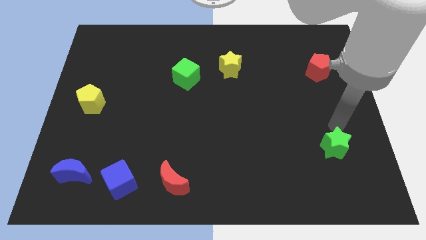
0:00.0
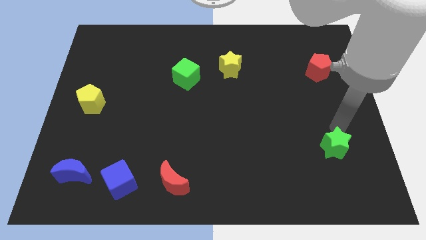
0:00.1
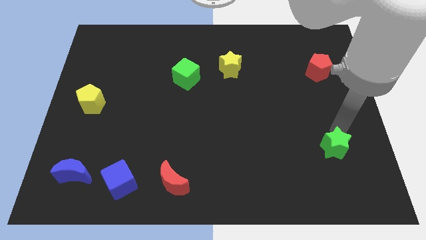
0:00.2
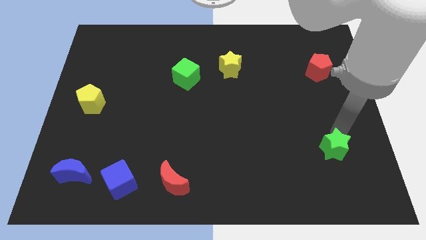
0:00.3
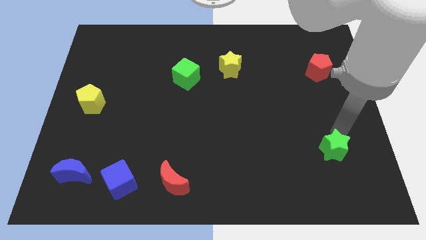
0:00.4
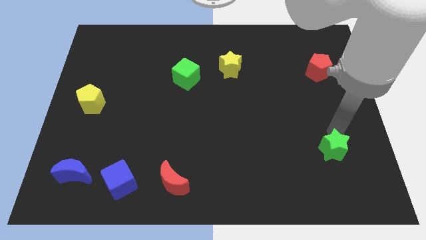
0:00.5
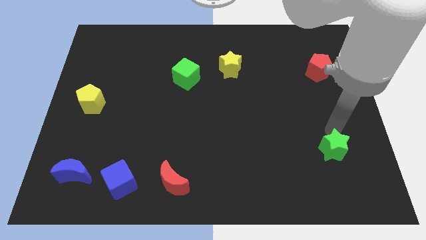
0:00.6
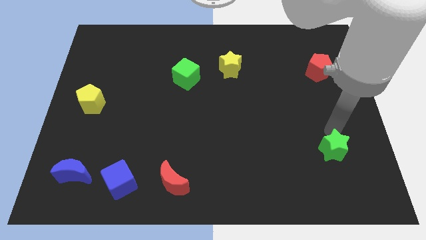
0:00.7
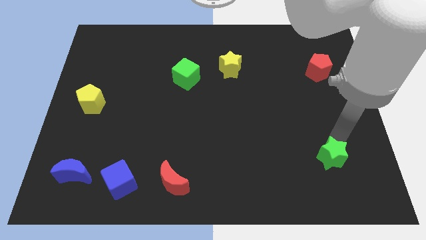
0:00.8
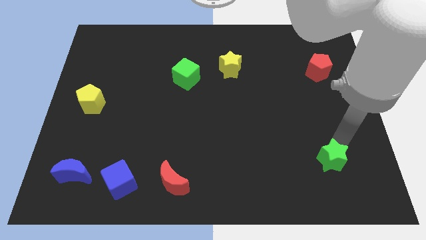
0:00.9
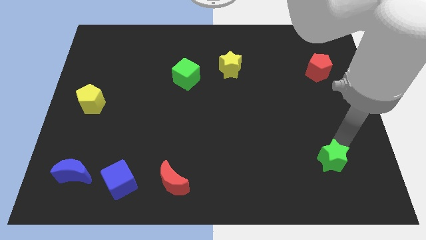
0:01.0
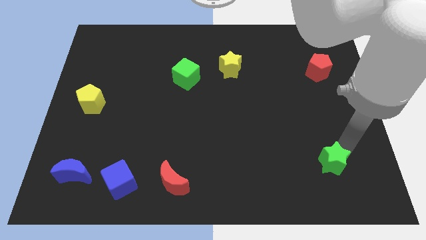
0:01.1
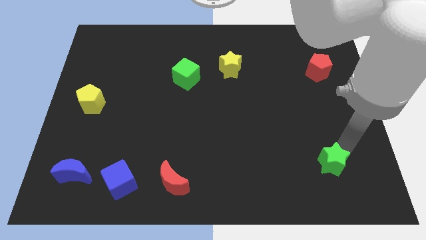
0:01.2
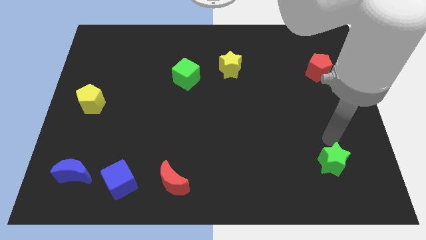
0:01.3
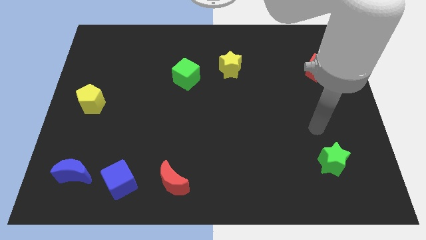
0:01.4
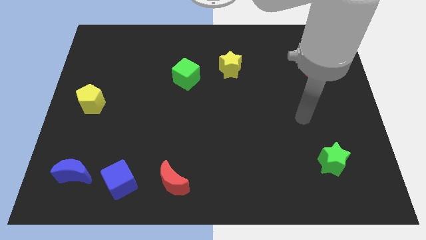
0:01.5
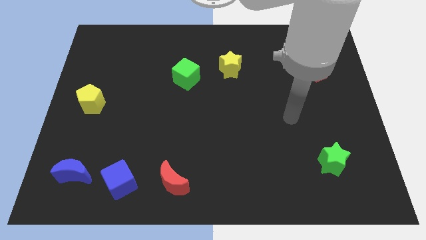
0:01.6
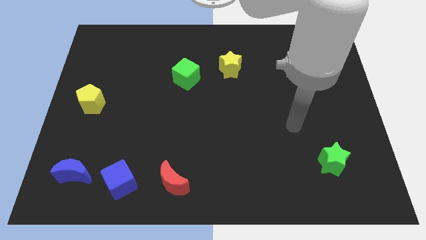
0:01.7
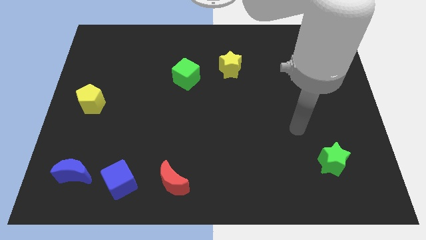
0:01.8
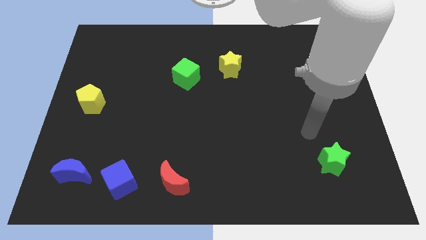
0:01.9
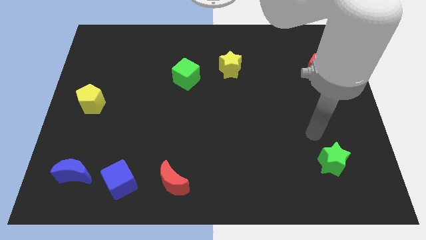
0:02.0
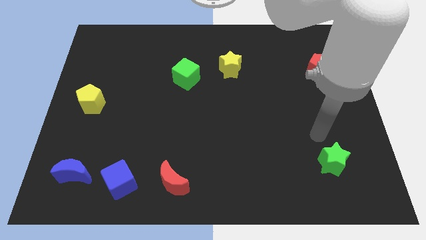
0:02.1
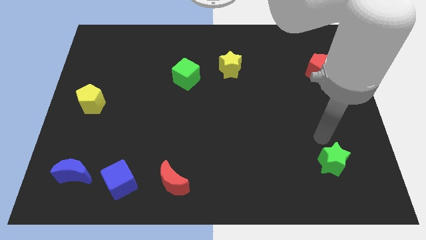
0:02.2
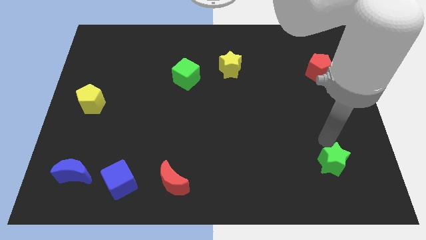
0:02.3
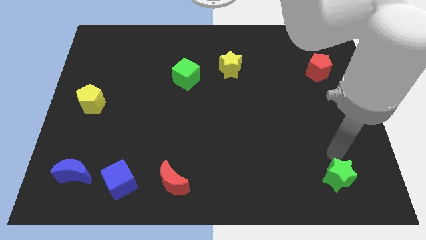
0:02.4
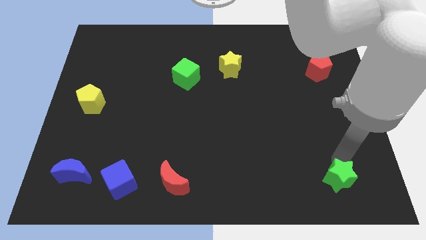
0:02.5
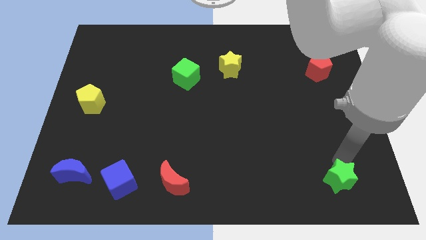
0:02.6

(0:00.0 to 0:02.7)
push the green star slightly to the bottom of the board

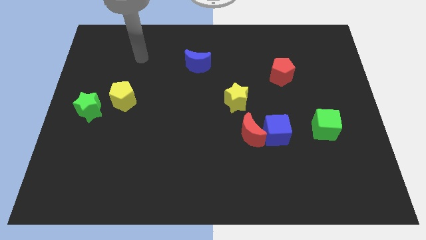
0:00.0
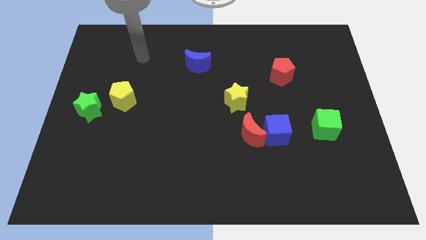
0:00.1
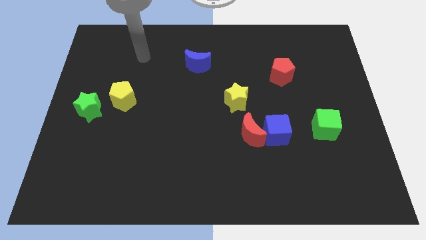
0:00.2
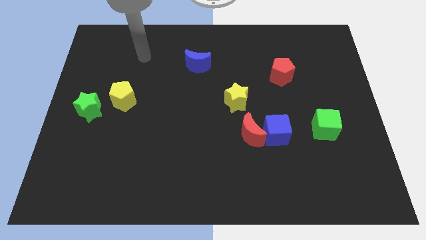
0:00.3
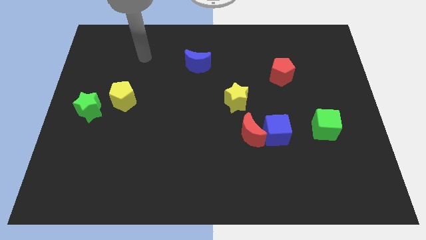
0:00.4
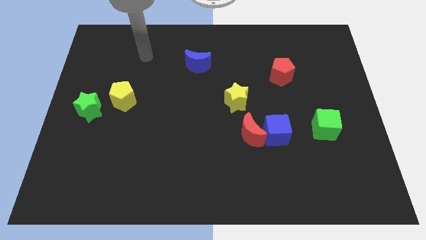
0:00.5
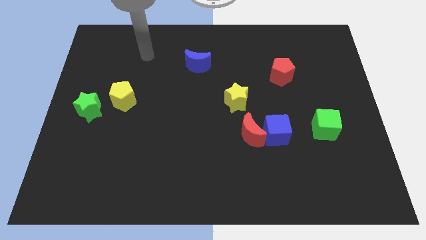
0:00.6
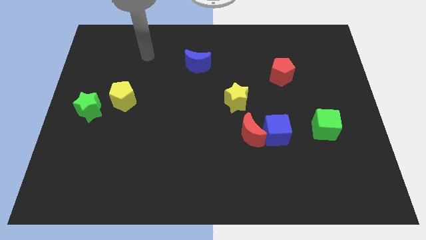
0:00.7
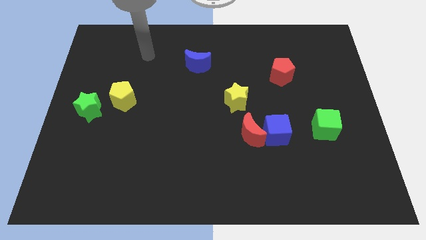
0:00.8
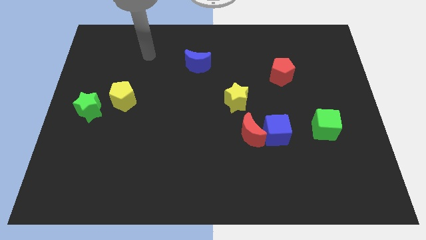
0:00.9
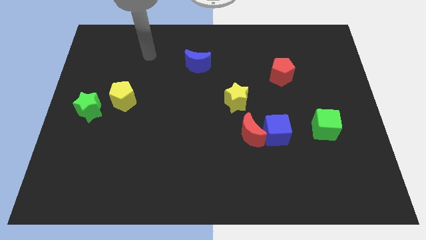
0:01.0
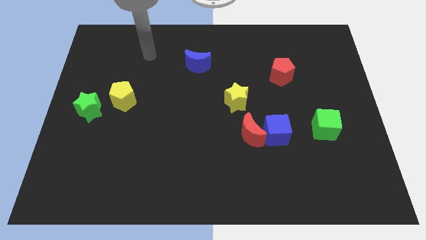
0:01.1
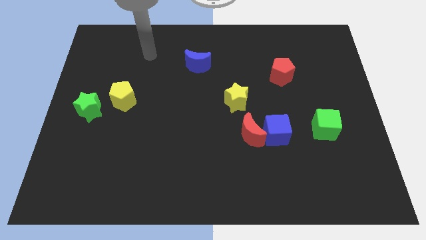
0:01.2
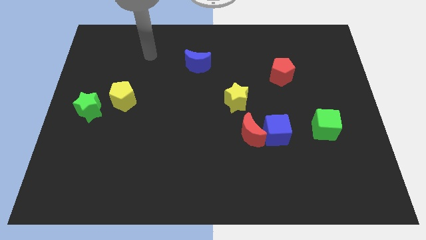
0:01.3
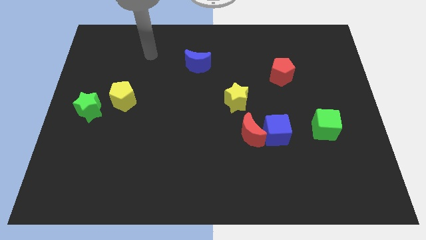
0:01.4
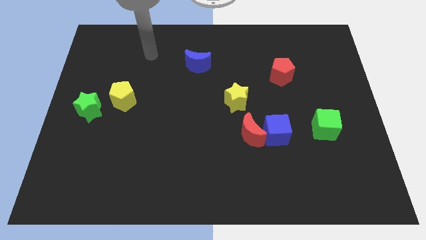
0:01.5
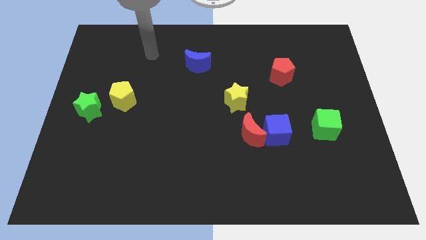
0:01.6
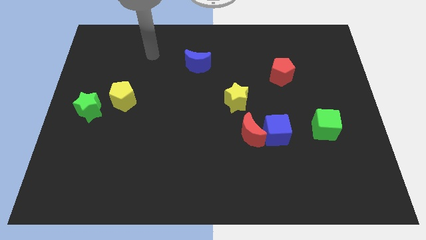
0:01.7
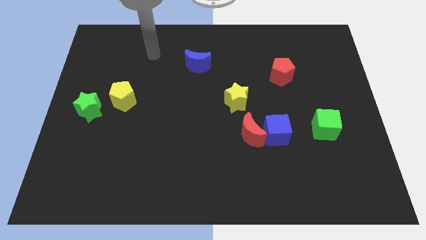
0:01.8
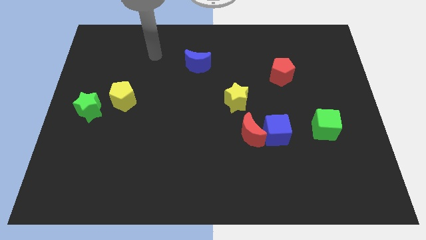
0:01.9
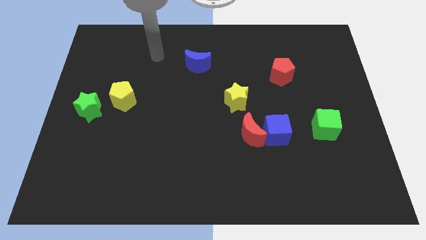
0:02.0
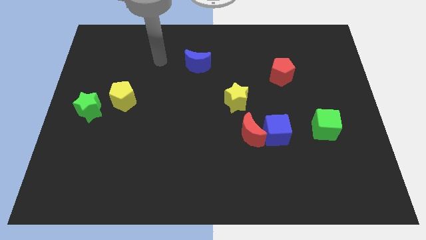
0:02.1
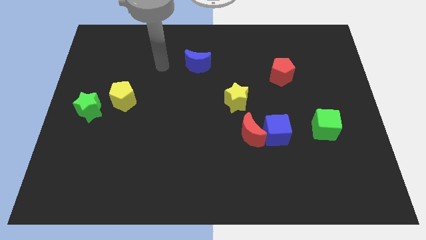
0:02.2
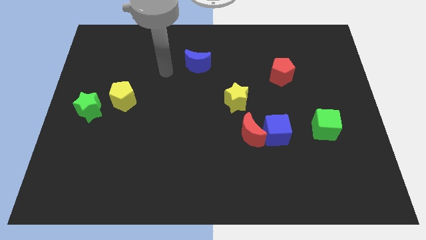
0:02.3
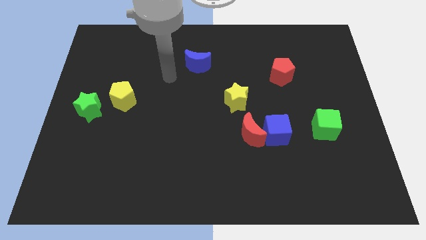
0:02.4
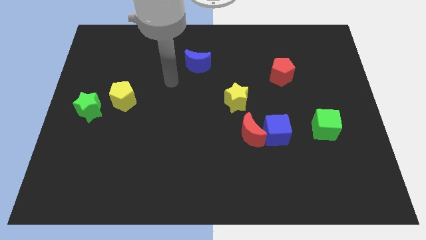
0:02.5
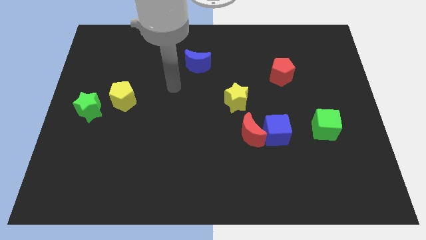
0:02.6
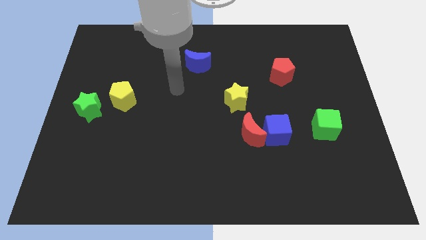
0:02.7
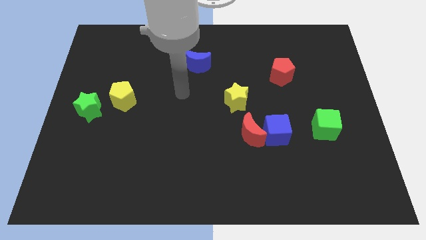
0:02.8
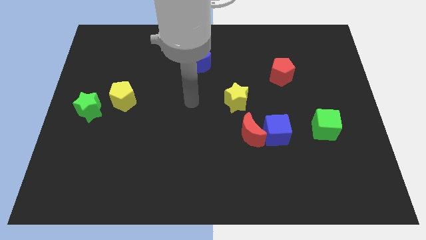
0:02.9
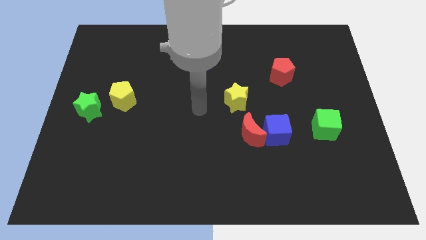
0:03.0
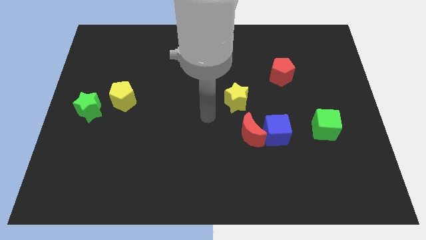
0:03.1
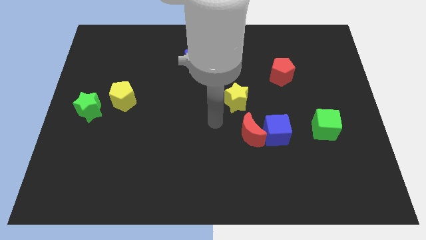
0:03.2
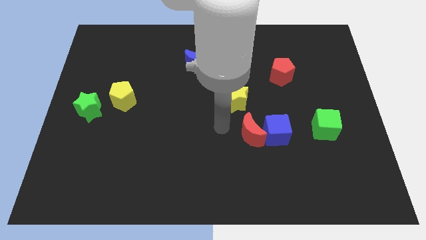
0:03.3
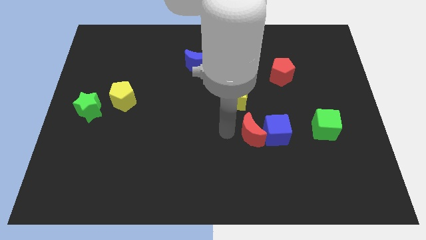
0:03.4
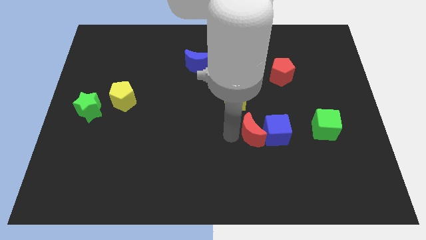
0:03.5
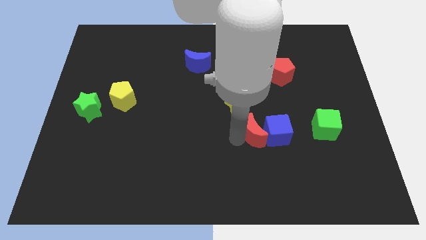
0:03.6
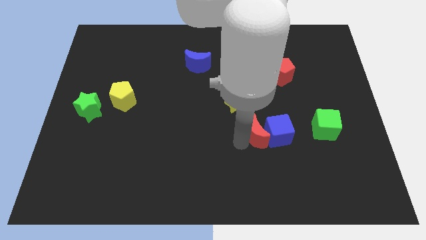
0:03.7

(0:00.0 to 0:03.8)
tap the red crescent

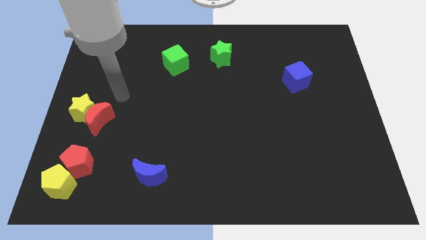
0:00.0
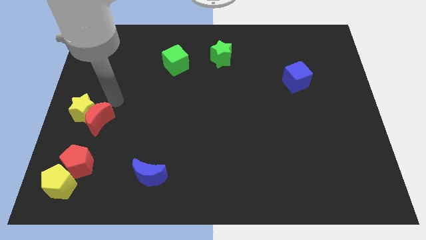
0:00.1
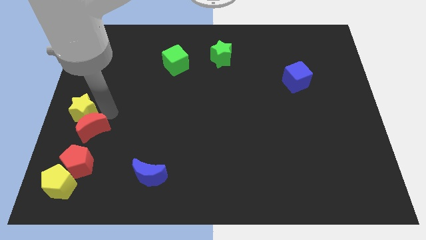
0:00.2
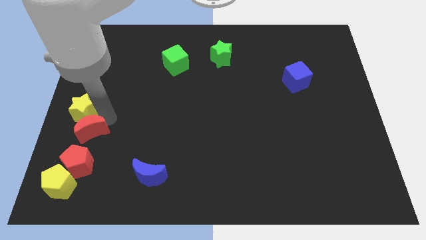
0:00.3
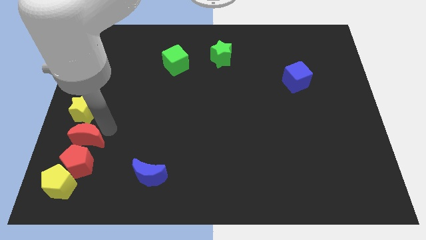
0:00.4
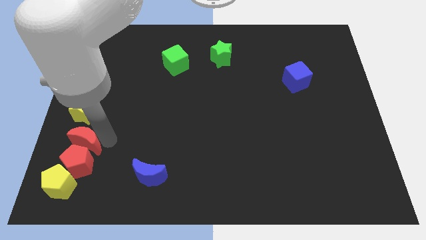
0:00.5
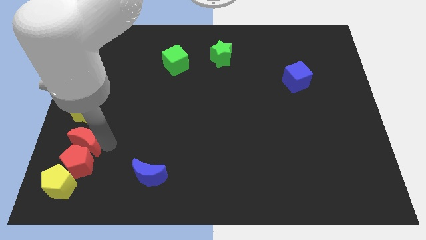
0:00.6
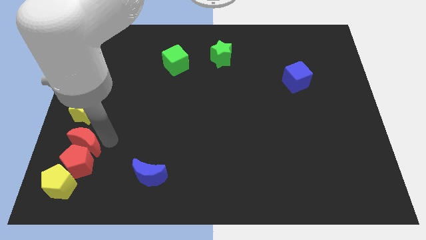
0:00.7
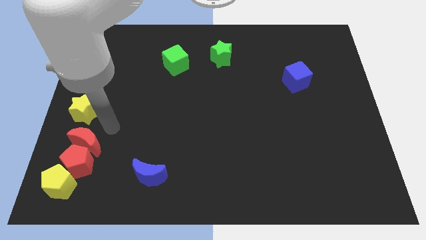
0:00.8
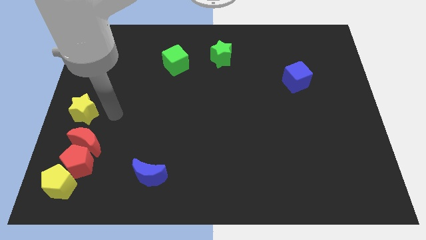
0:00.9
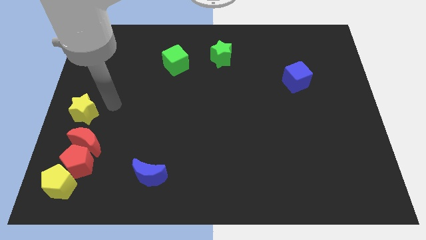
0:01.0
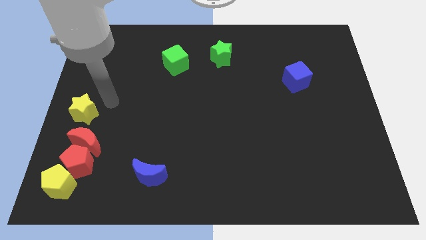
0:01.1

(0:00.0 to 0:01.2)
separate the red crescent from the yellow star

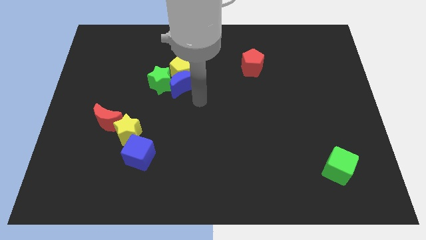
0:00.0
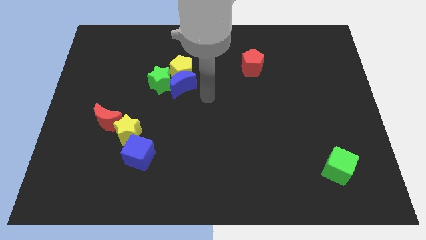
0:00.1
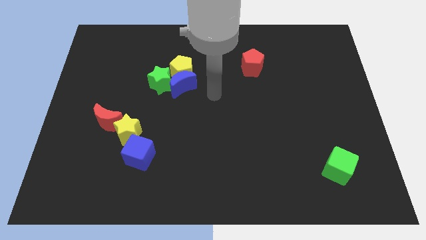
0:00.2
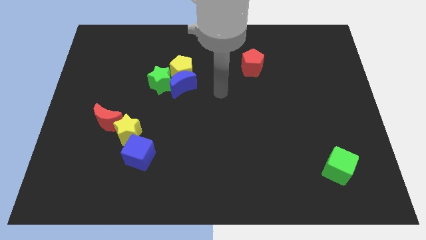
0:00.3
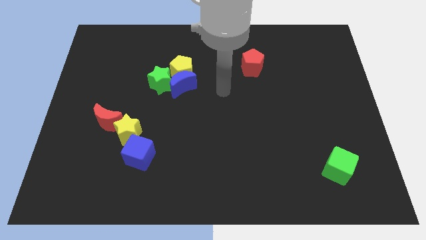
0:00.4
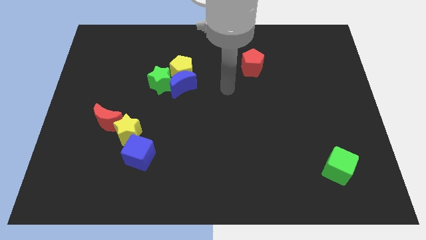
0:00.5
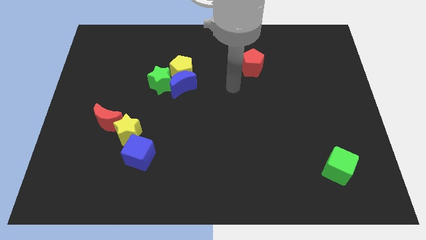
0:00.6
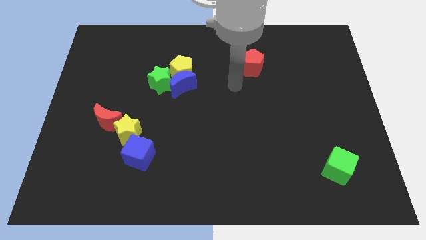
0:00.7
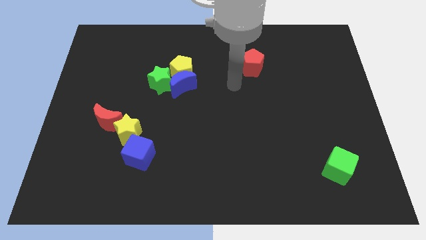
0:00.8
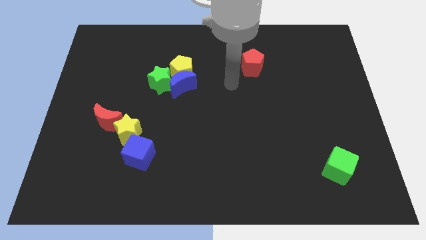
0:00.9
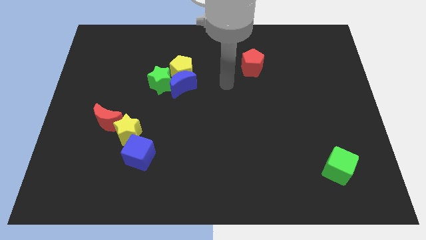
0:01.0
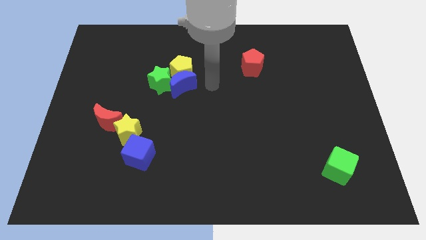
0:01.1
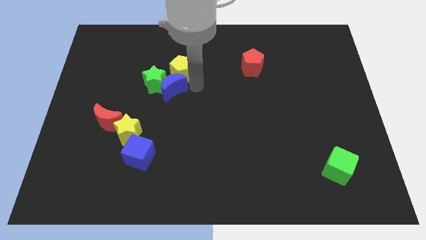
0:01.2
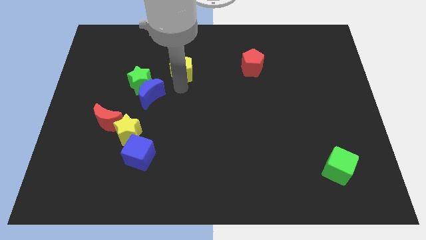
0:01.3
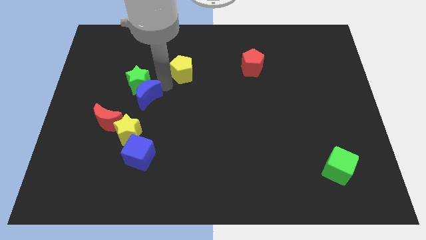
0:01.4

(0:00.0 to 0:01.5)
push the blue crescent to the bottom right side of the green star
